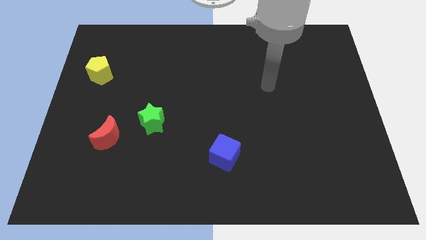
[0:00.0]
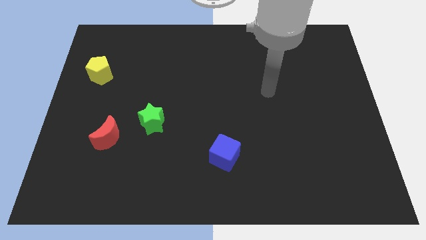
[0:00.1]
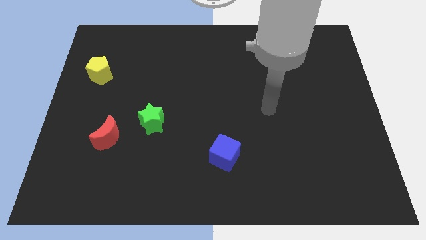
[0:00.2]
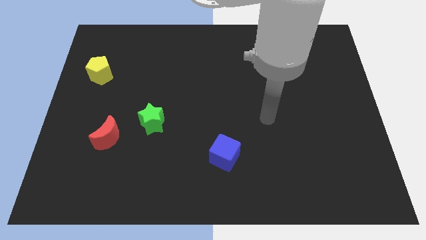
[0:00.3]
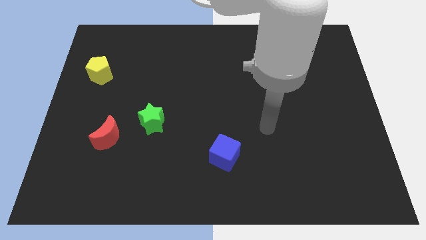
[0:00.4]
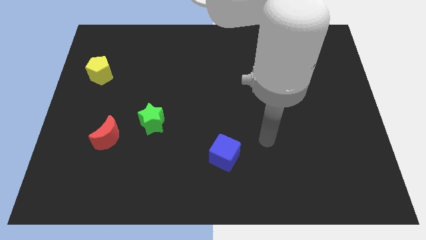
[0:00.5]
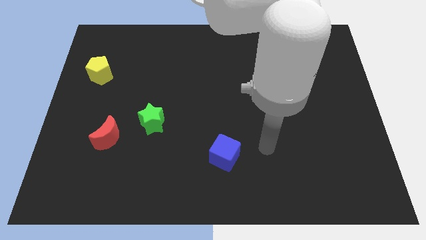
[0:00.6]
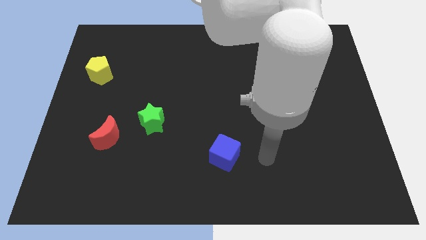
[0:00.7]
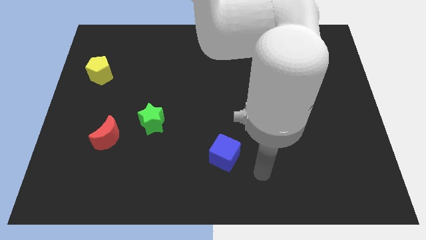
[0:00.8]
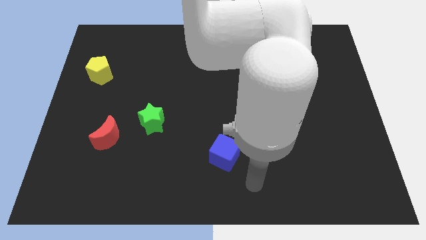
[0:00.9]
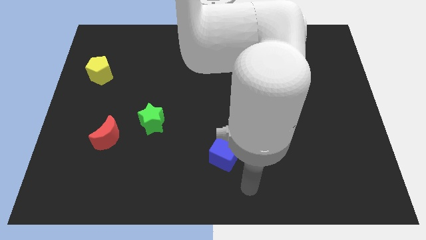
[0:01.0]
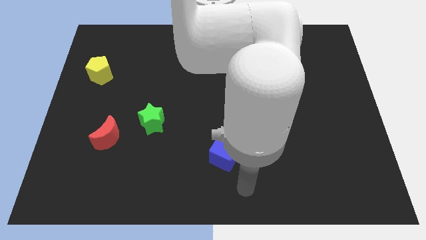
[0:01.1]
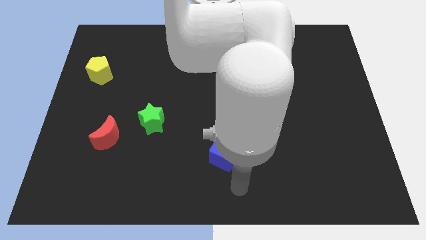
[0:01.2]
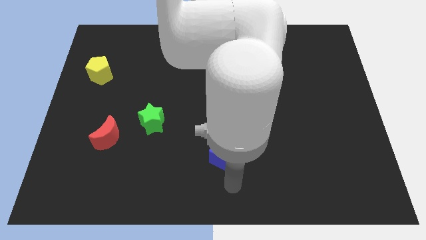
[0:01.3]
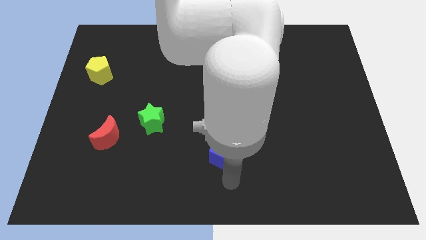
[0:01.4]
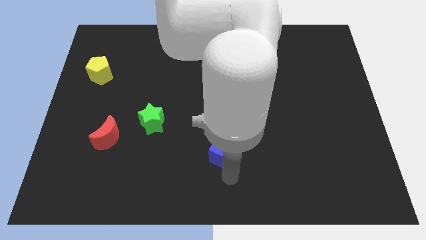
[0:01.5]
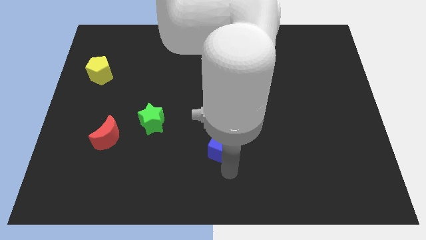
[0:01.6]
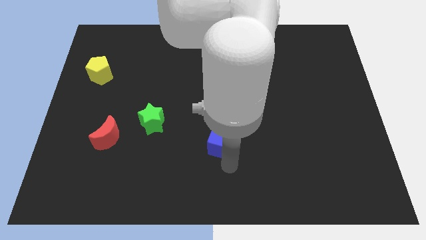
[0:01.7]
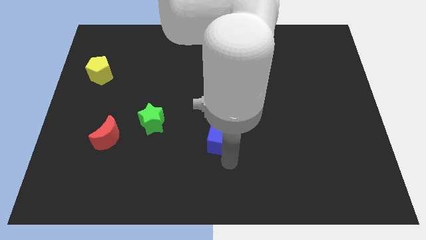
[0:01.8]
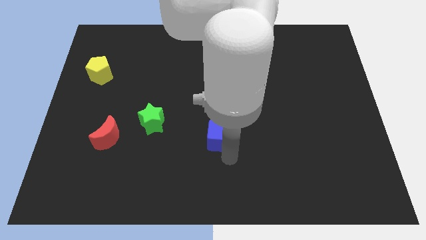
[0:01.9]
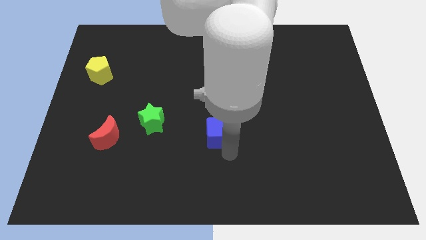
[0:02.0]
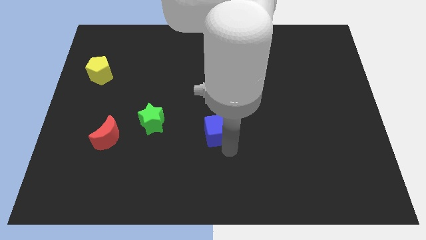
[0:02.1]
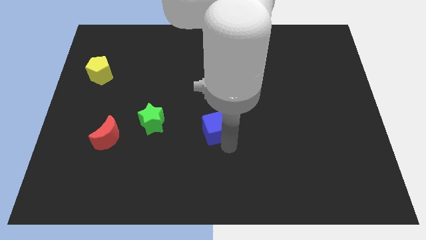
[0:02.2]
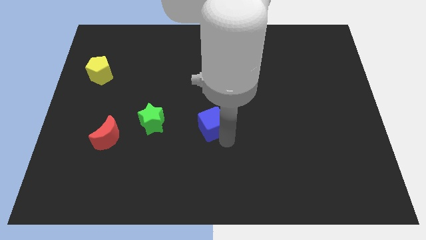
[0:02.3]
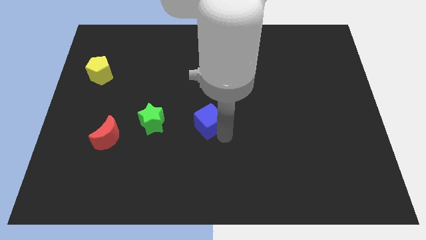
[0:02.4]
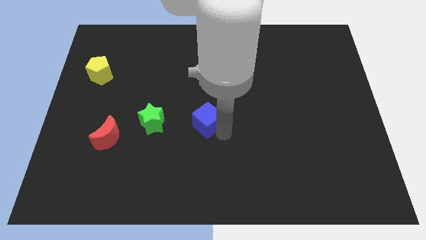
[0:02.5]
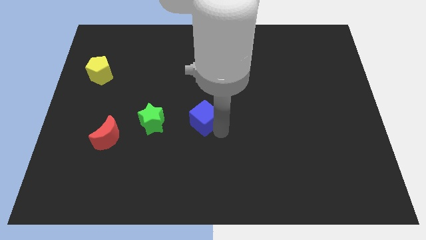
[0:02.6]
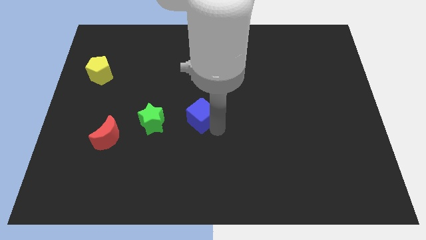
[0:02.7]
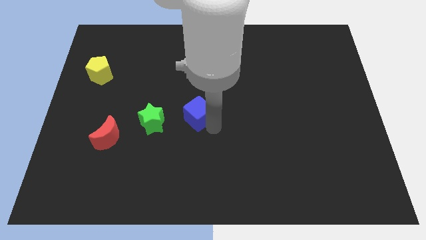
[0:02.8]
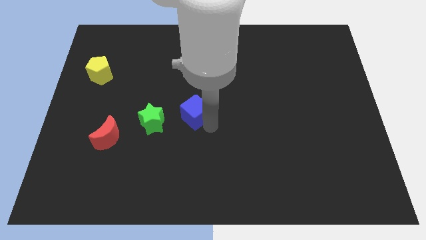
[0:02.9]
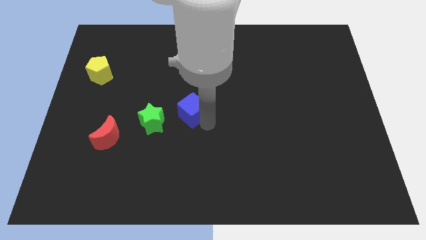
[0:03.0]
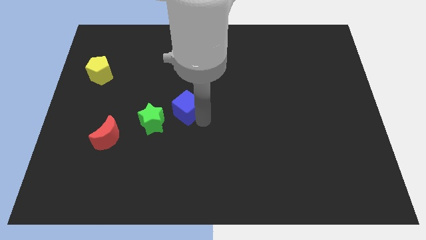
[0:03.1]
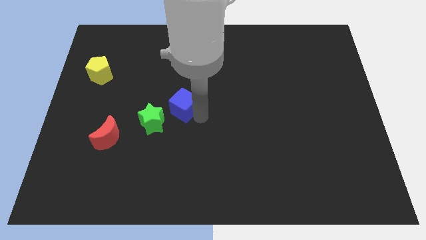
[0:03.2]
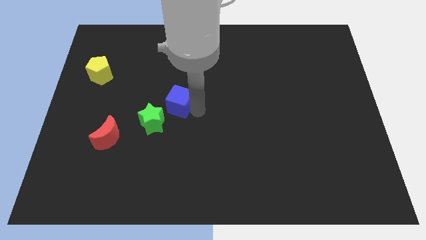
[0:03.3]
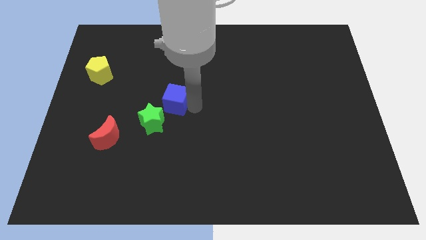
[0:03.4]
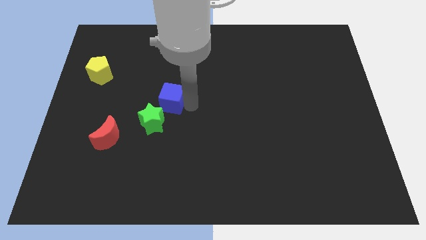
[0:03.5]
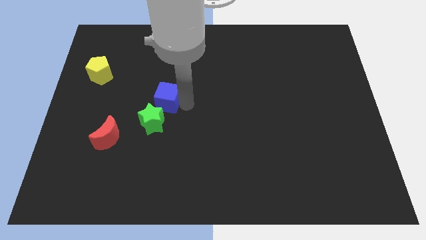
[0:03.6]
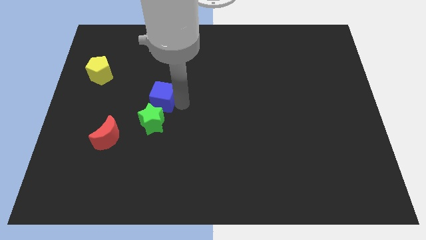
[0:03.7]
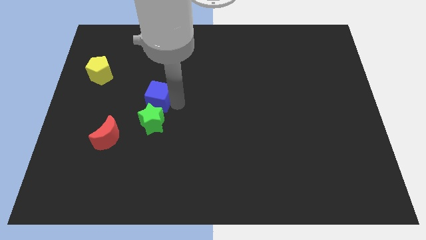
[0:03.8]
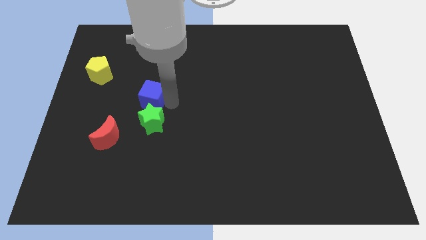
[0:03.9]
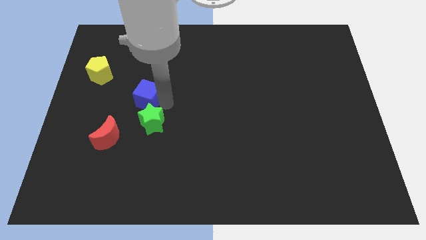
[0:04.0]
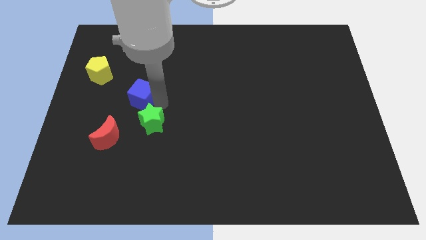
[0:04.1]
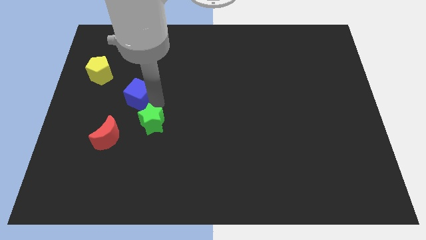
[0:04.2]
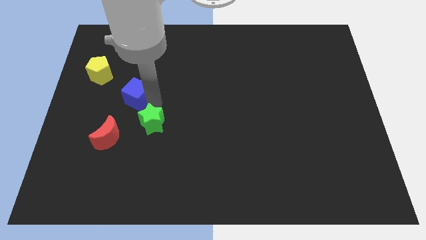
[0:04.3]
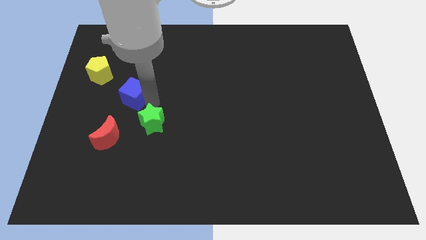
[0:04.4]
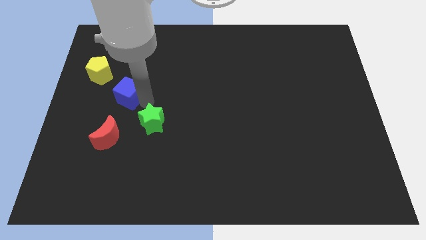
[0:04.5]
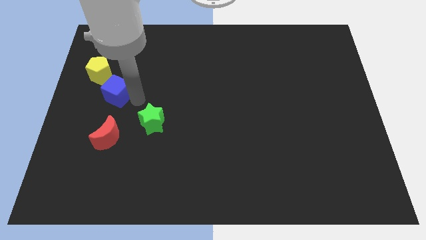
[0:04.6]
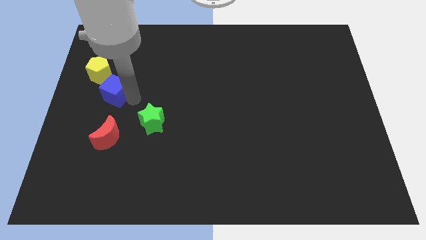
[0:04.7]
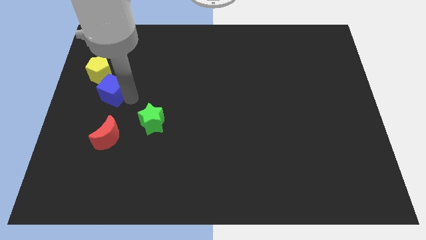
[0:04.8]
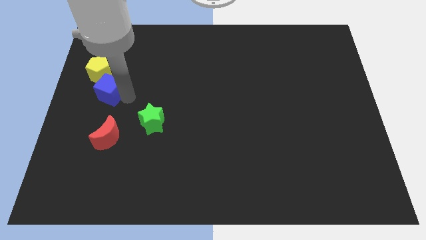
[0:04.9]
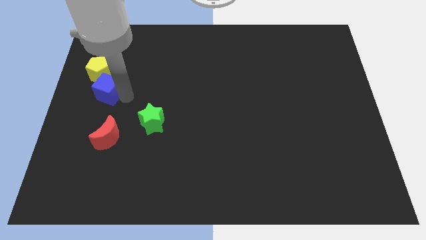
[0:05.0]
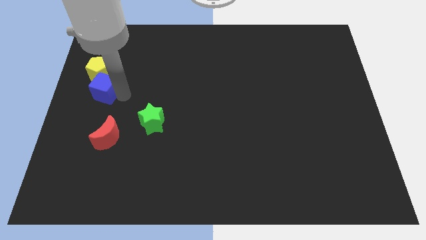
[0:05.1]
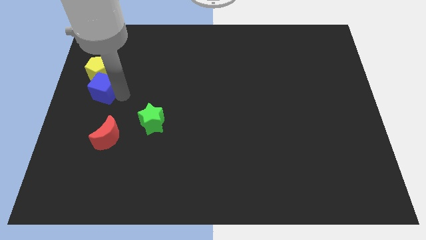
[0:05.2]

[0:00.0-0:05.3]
move the cube close to the yellow block

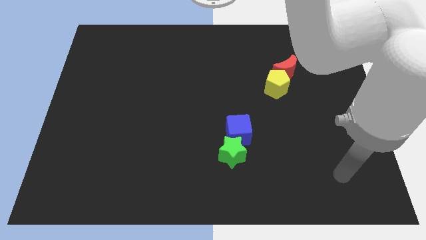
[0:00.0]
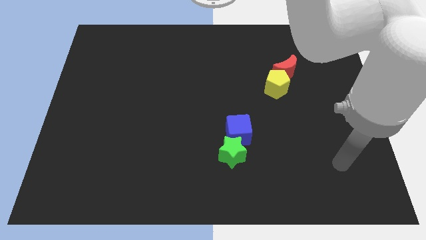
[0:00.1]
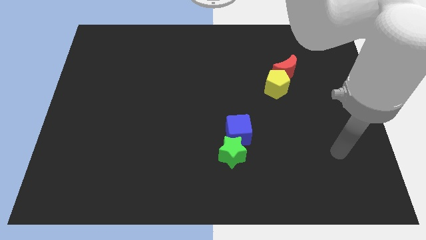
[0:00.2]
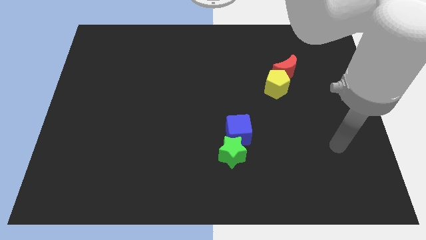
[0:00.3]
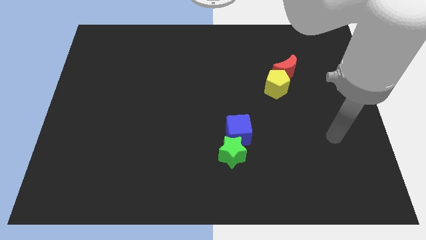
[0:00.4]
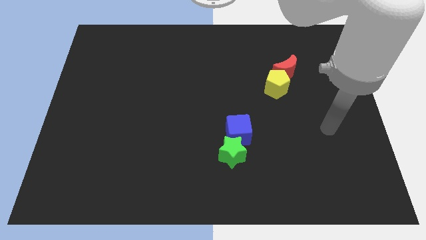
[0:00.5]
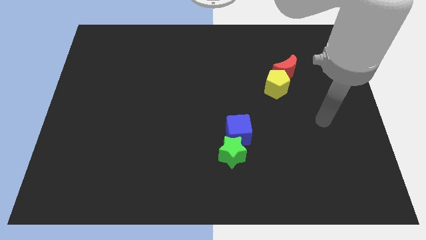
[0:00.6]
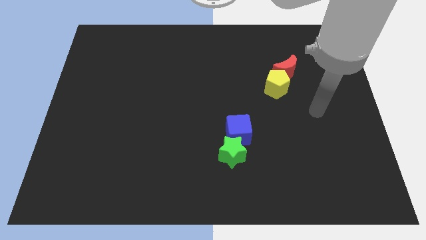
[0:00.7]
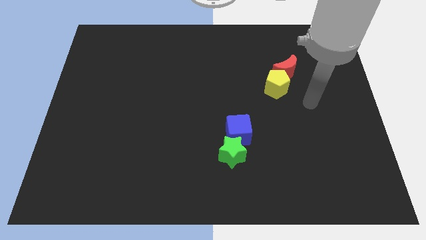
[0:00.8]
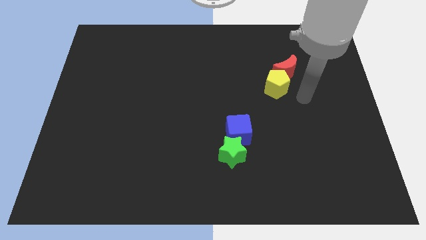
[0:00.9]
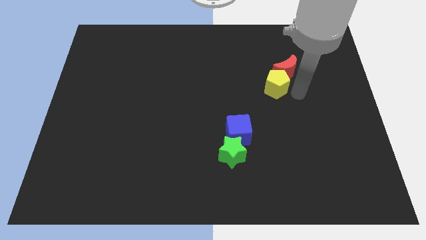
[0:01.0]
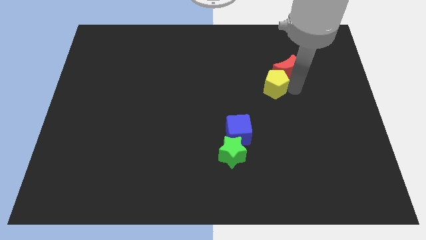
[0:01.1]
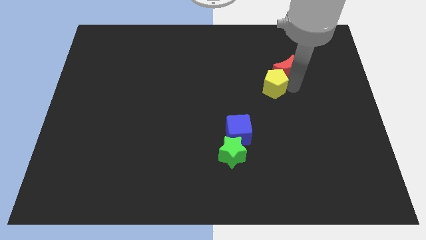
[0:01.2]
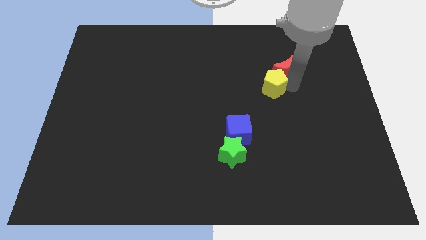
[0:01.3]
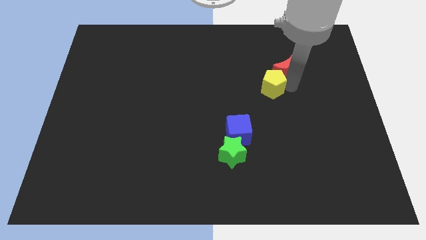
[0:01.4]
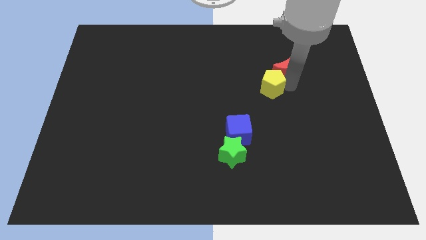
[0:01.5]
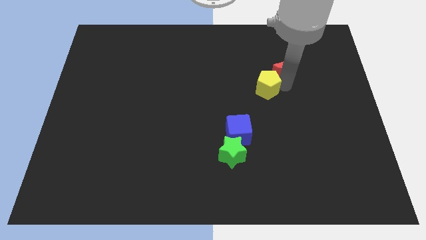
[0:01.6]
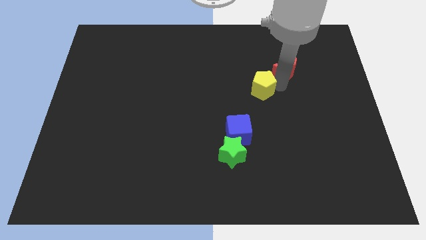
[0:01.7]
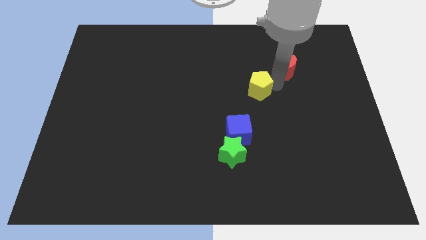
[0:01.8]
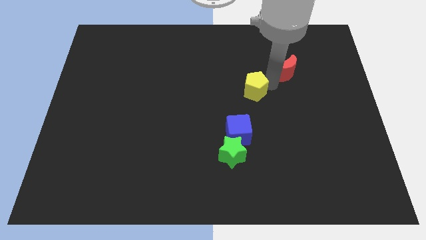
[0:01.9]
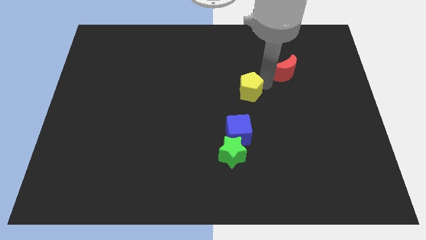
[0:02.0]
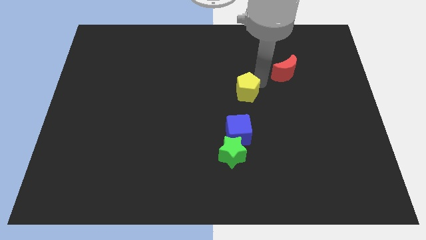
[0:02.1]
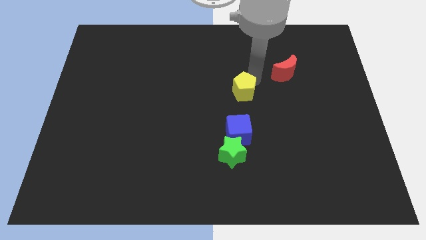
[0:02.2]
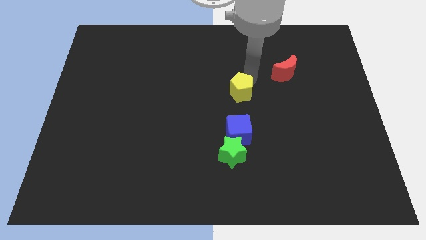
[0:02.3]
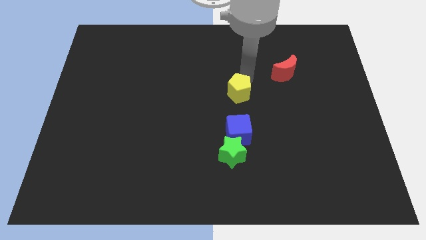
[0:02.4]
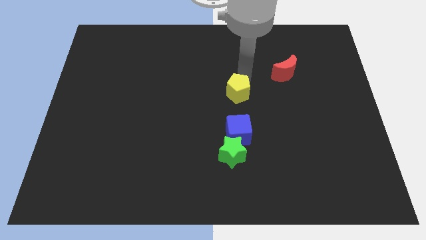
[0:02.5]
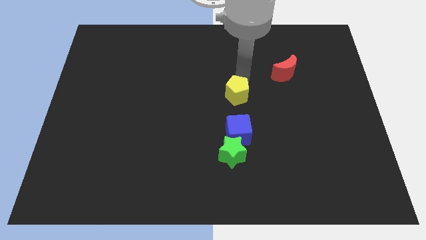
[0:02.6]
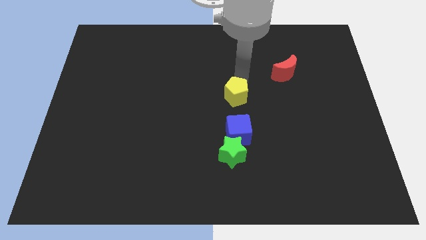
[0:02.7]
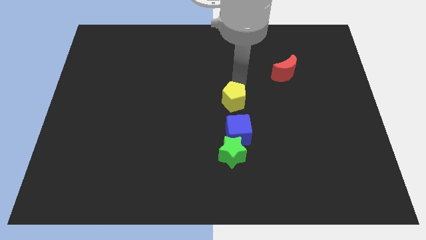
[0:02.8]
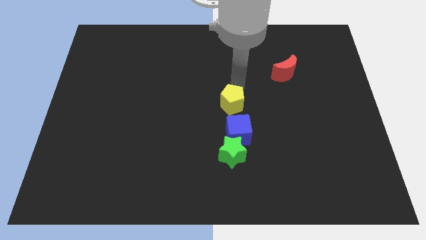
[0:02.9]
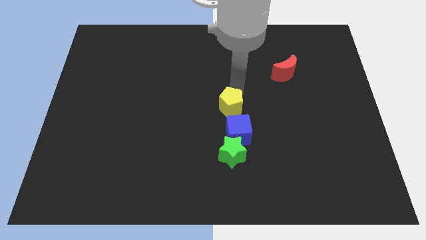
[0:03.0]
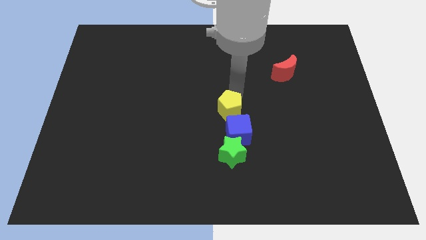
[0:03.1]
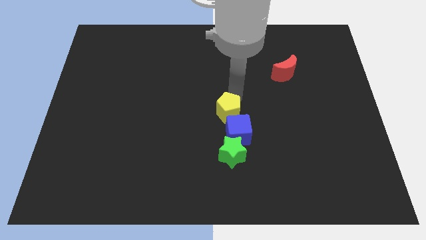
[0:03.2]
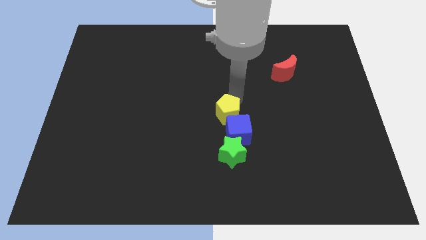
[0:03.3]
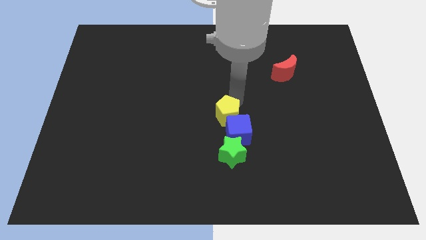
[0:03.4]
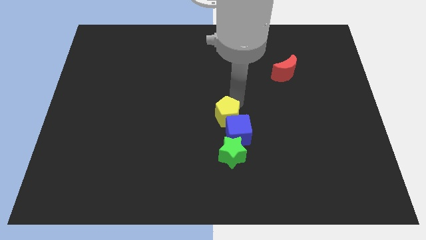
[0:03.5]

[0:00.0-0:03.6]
move the yellow pentagon close to the blue block
